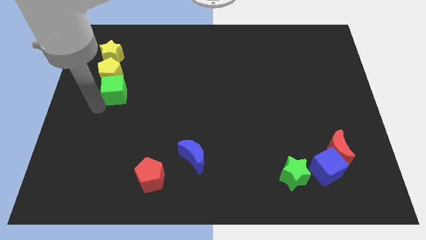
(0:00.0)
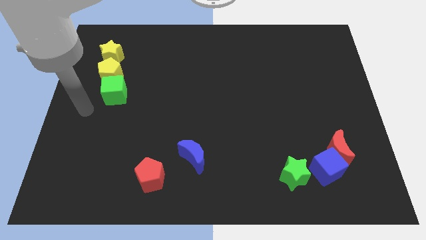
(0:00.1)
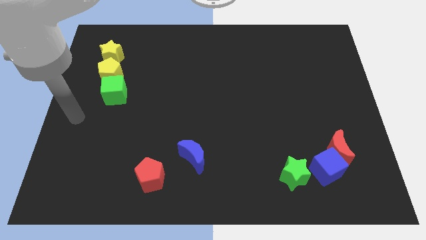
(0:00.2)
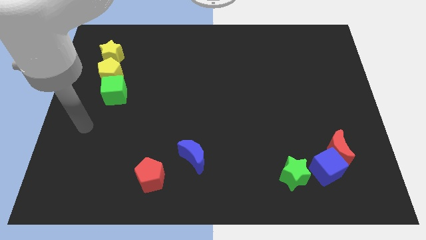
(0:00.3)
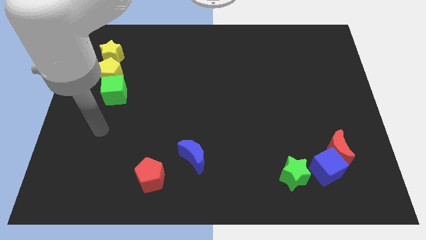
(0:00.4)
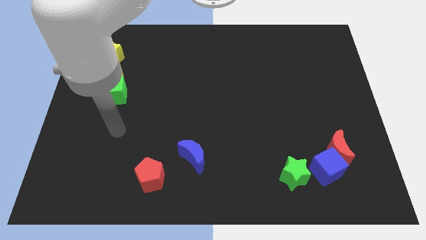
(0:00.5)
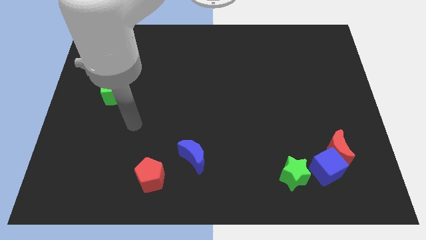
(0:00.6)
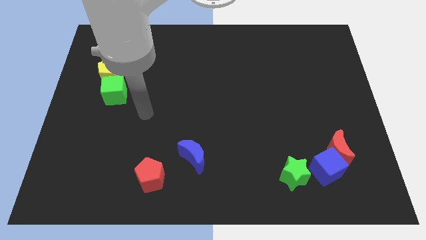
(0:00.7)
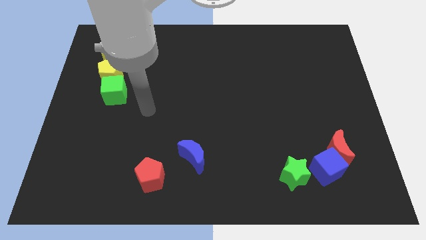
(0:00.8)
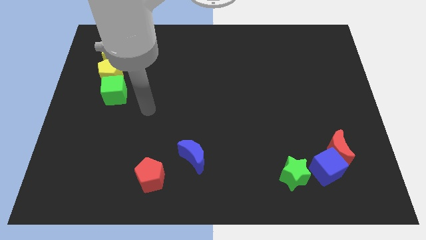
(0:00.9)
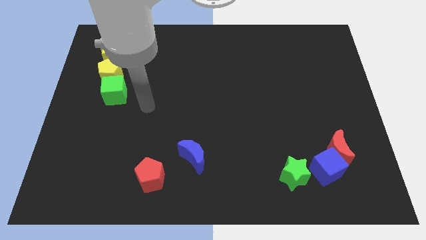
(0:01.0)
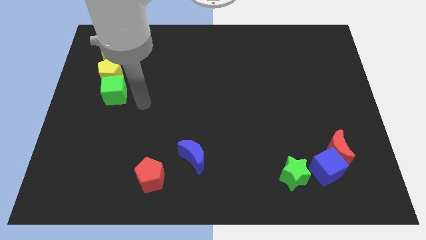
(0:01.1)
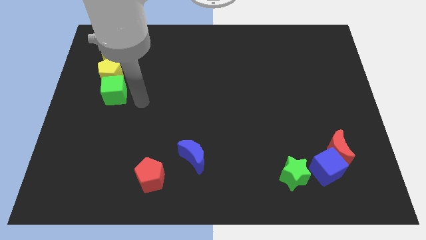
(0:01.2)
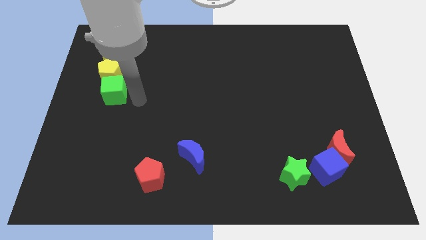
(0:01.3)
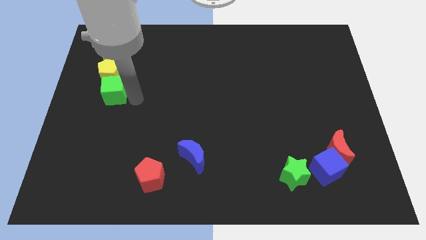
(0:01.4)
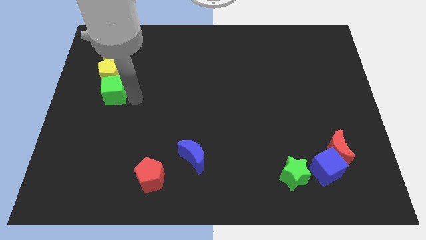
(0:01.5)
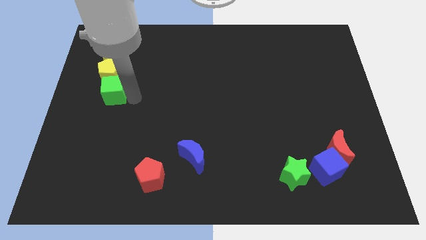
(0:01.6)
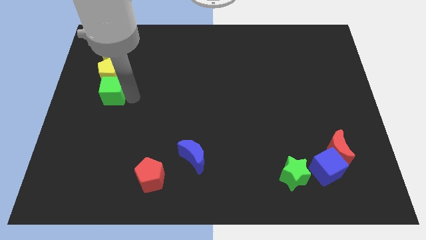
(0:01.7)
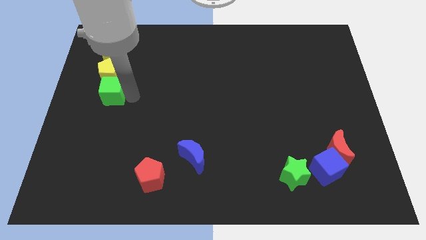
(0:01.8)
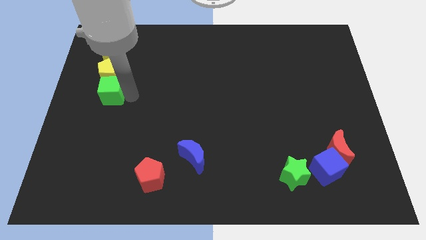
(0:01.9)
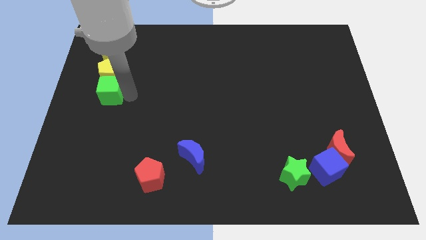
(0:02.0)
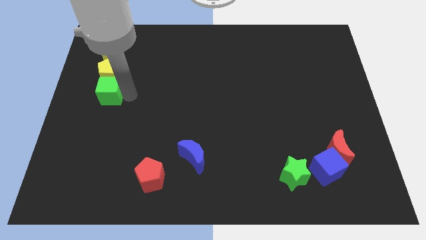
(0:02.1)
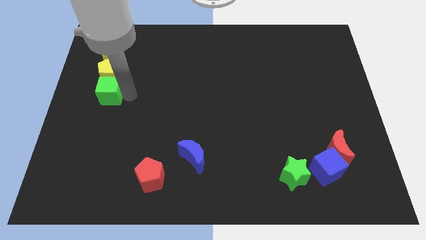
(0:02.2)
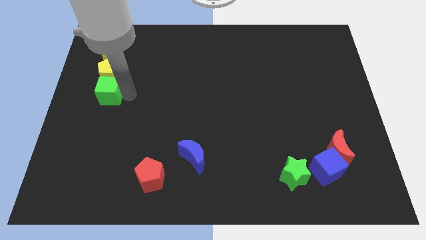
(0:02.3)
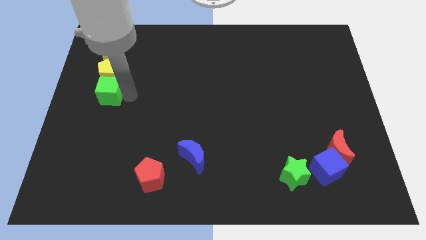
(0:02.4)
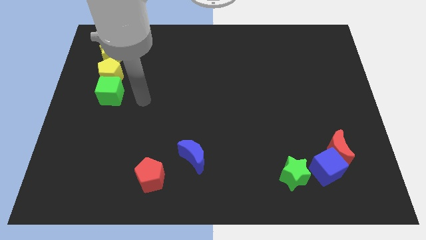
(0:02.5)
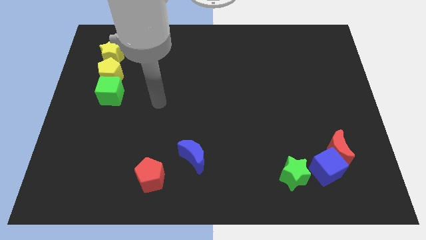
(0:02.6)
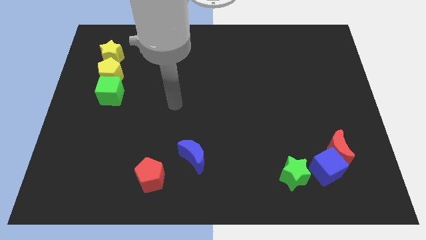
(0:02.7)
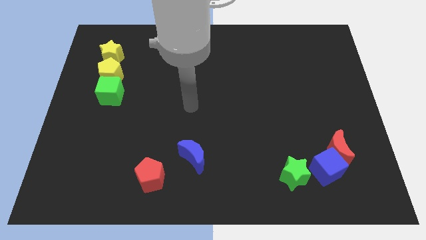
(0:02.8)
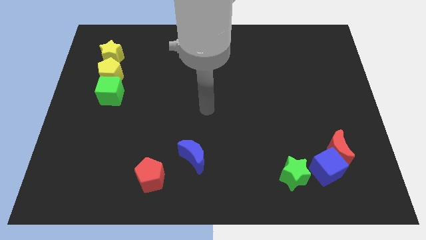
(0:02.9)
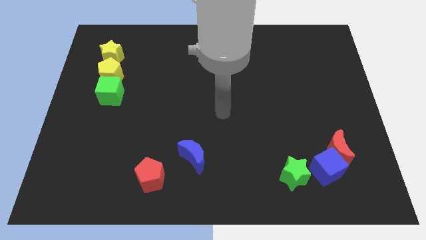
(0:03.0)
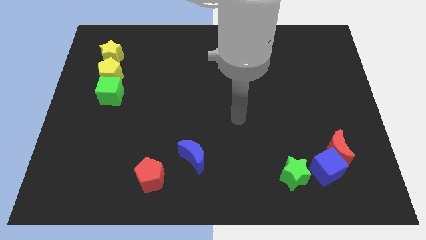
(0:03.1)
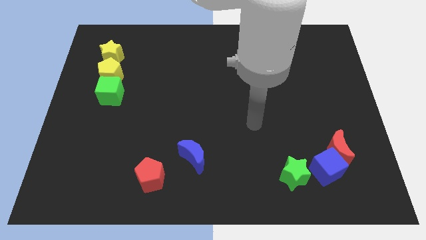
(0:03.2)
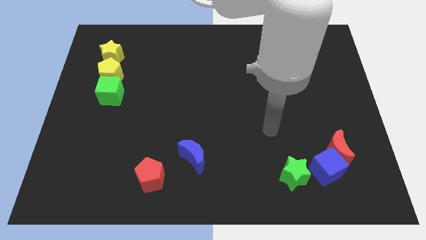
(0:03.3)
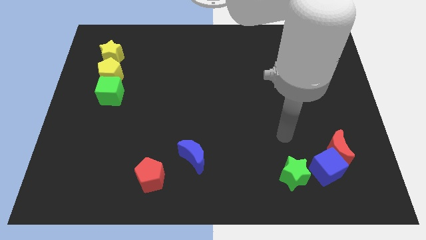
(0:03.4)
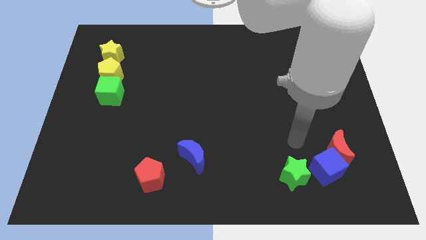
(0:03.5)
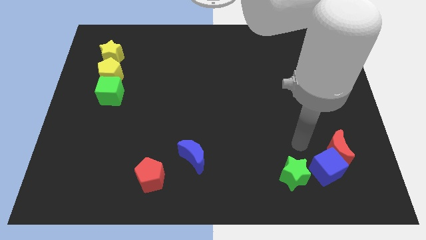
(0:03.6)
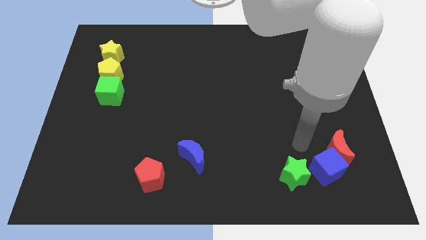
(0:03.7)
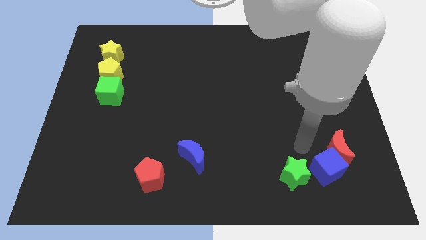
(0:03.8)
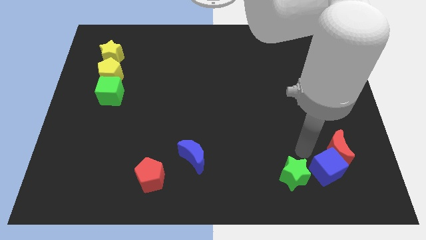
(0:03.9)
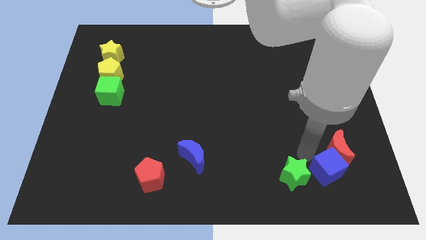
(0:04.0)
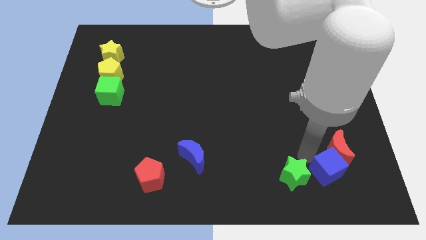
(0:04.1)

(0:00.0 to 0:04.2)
move your arm to the top of blue cube

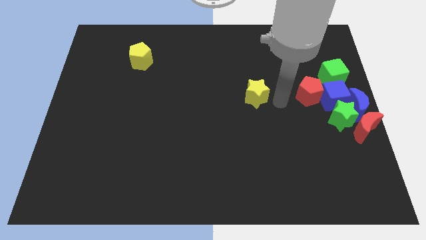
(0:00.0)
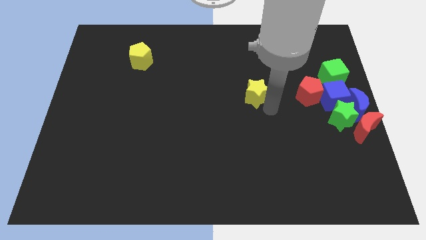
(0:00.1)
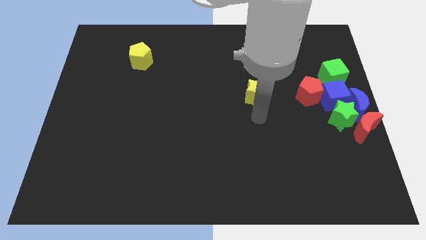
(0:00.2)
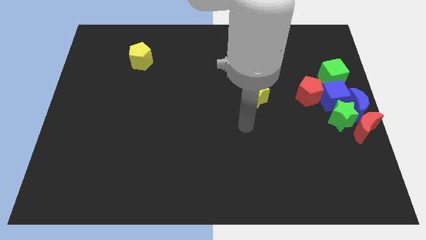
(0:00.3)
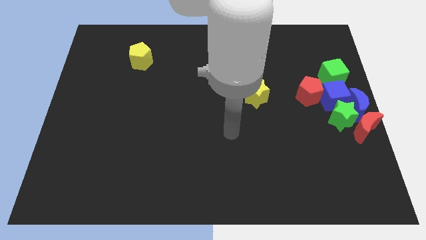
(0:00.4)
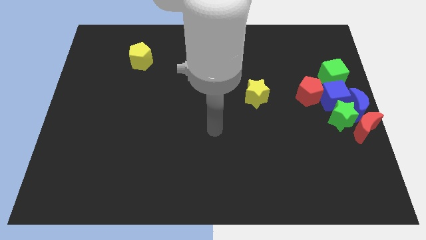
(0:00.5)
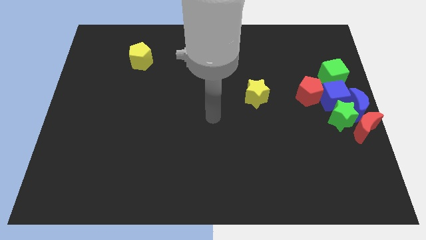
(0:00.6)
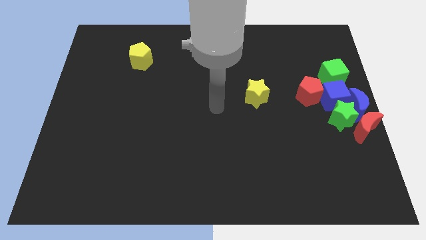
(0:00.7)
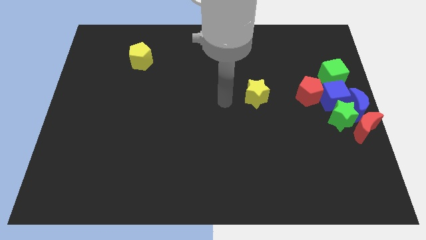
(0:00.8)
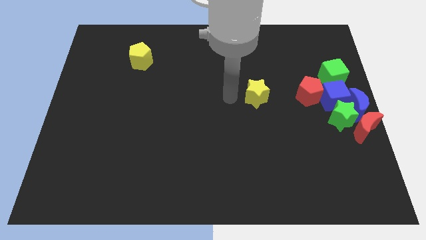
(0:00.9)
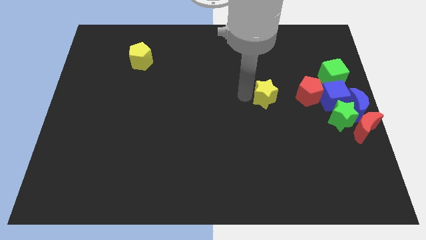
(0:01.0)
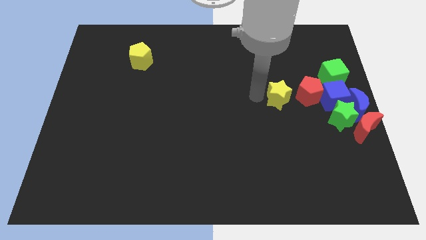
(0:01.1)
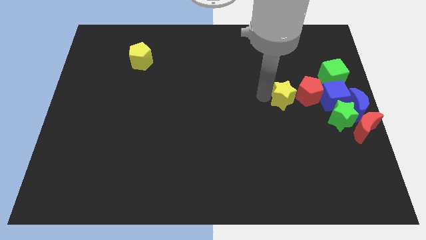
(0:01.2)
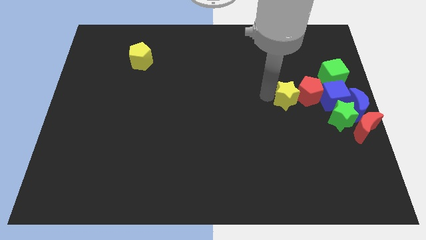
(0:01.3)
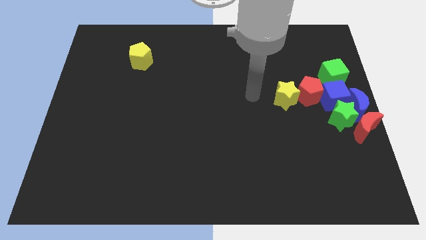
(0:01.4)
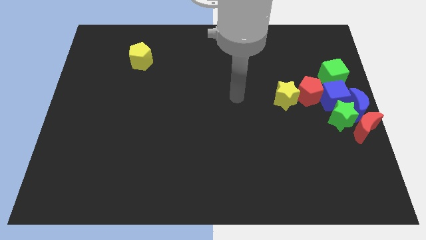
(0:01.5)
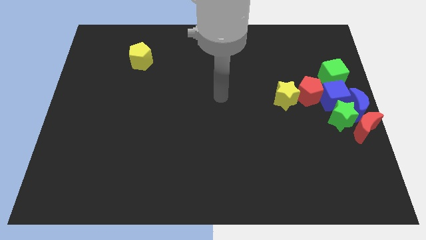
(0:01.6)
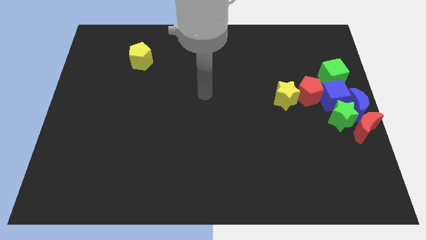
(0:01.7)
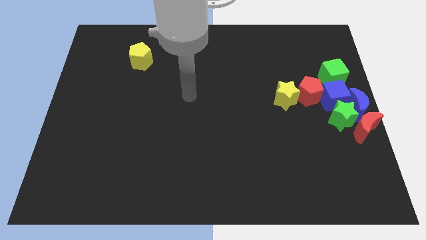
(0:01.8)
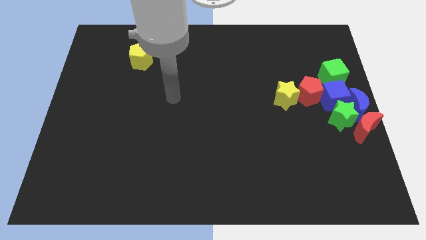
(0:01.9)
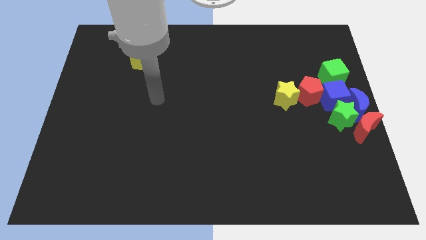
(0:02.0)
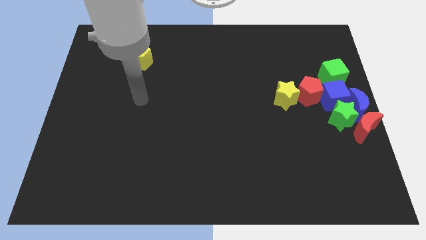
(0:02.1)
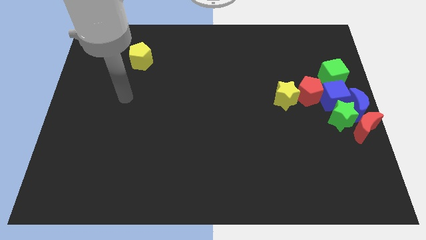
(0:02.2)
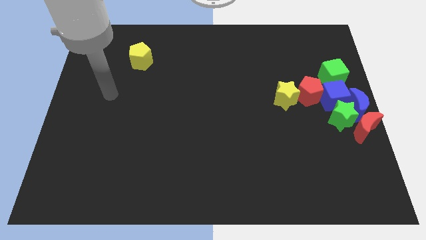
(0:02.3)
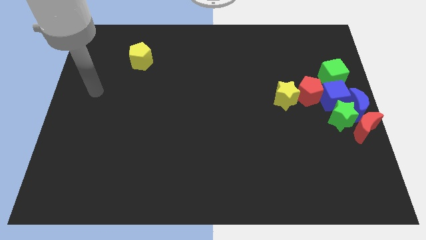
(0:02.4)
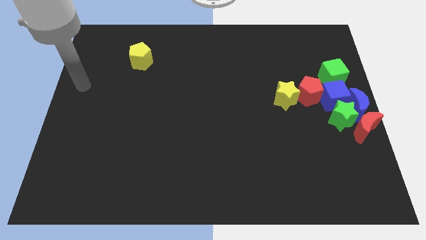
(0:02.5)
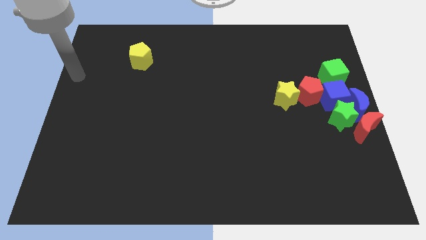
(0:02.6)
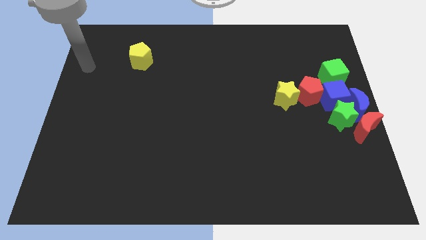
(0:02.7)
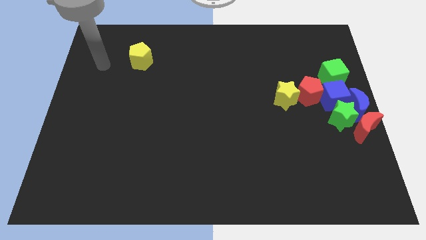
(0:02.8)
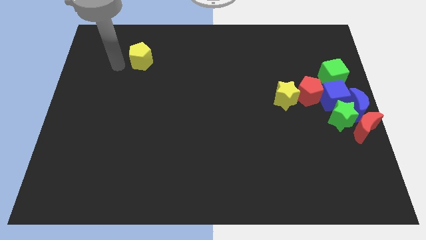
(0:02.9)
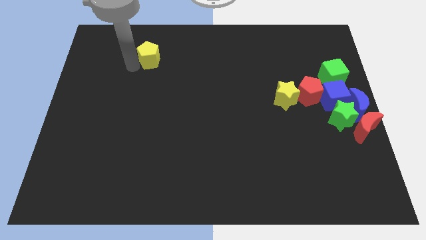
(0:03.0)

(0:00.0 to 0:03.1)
push yellow star into the red pentagon

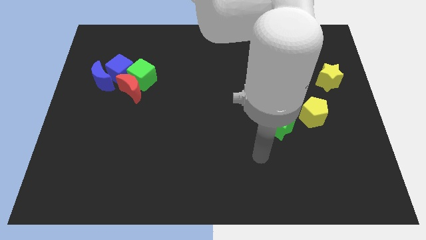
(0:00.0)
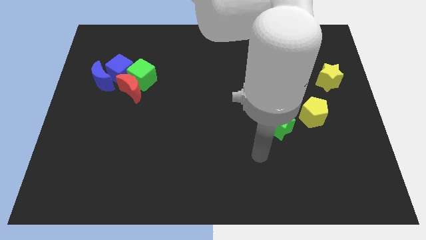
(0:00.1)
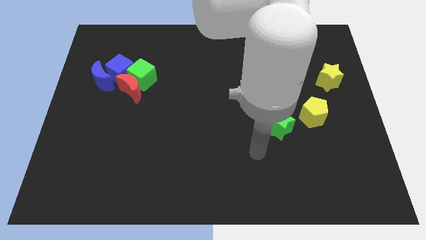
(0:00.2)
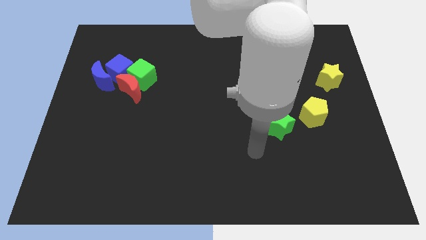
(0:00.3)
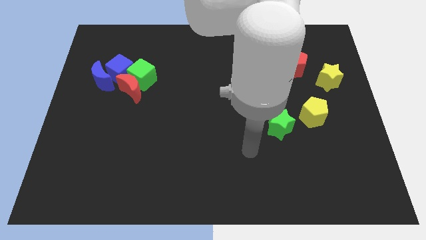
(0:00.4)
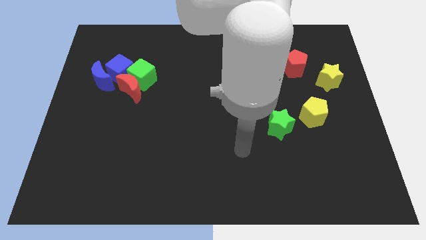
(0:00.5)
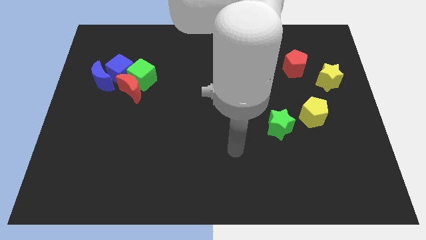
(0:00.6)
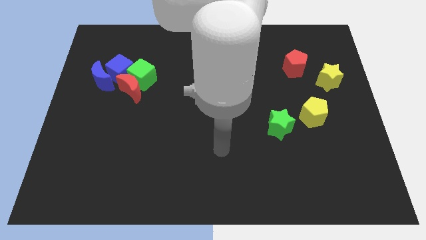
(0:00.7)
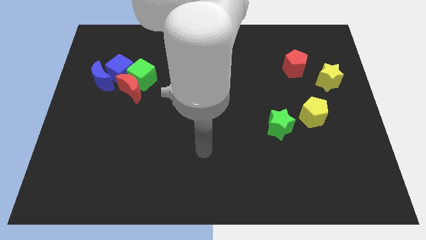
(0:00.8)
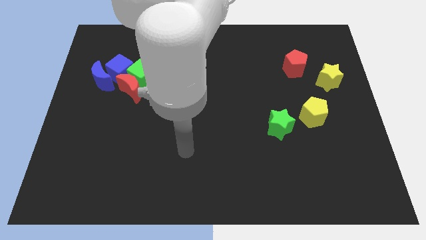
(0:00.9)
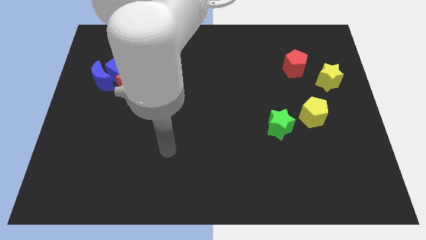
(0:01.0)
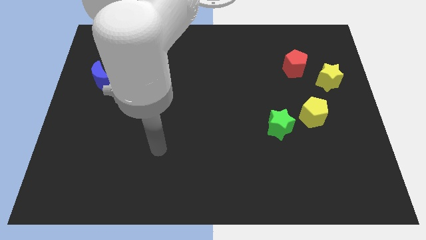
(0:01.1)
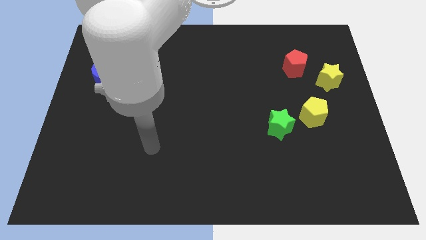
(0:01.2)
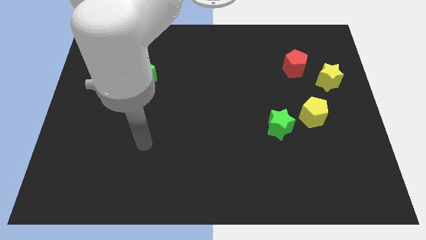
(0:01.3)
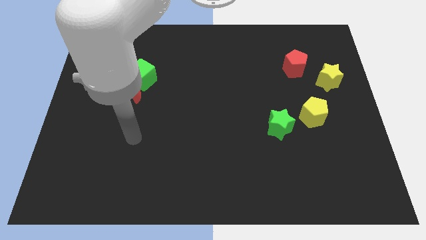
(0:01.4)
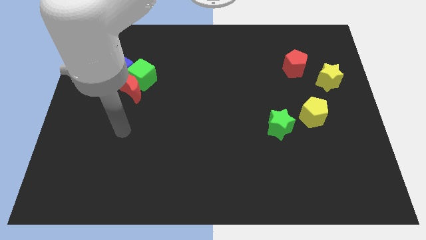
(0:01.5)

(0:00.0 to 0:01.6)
point your hand at the bottom side of the red crescent

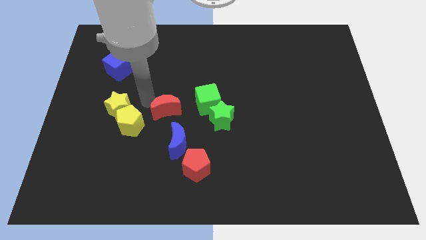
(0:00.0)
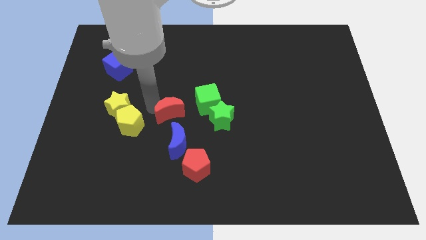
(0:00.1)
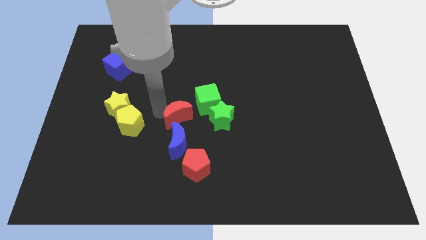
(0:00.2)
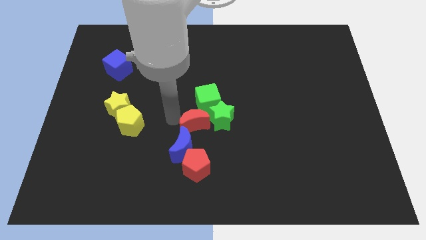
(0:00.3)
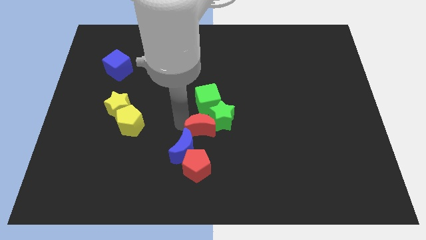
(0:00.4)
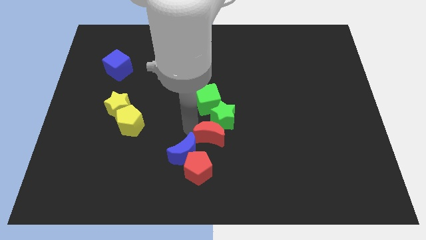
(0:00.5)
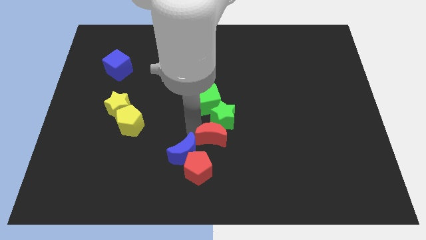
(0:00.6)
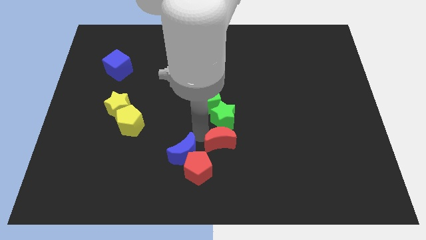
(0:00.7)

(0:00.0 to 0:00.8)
push the red crescent into the blue crescent
